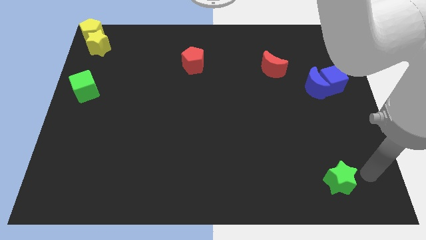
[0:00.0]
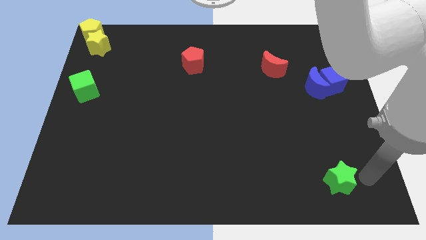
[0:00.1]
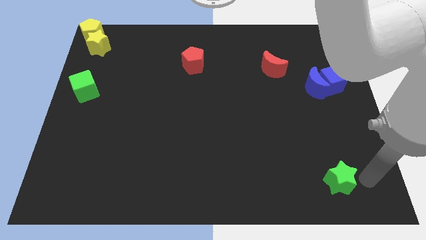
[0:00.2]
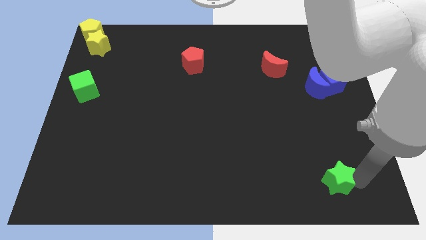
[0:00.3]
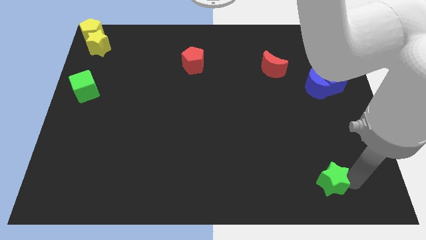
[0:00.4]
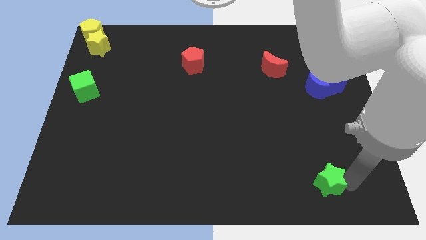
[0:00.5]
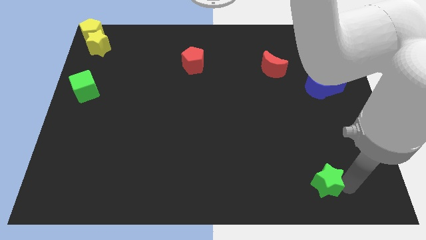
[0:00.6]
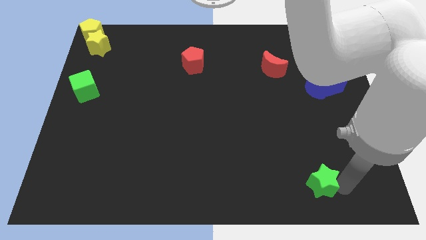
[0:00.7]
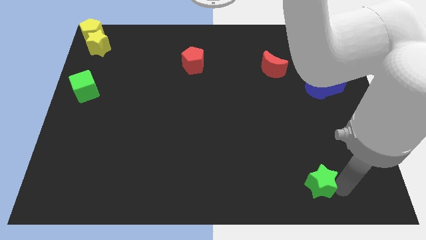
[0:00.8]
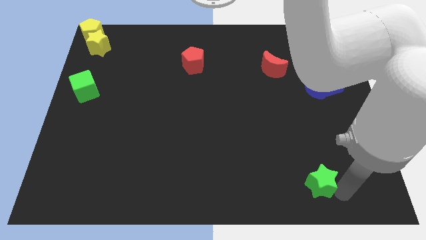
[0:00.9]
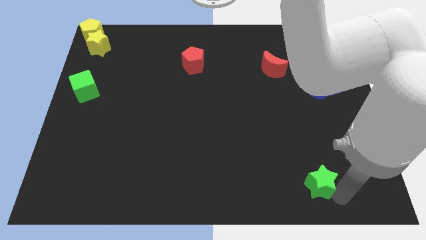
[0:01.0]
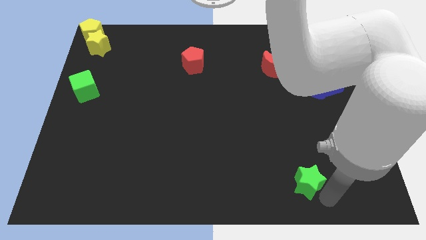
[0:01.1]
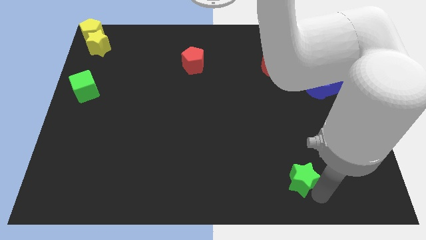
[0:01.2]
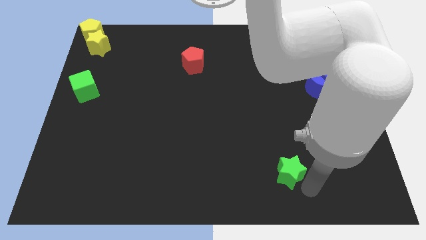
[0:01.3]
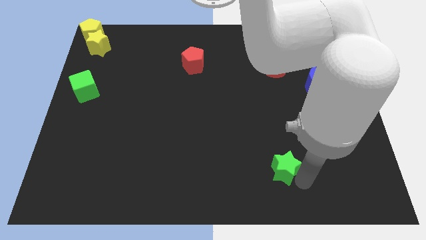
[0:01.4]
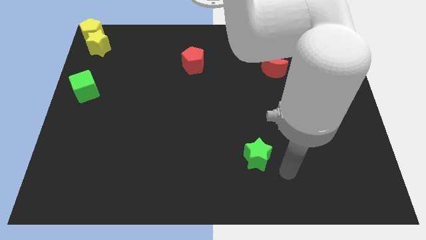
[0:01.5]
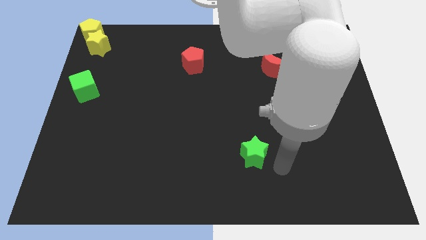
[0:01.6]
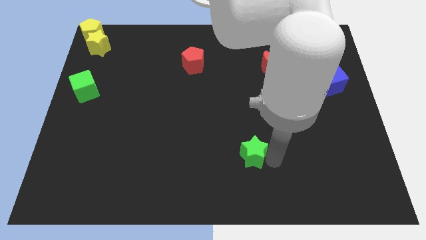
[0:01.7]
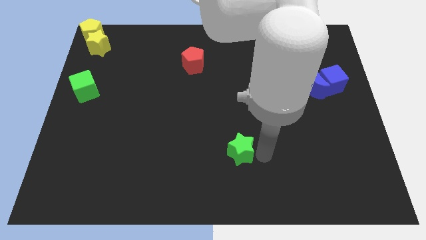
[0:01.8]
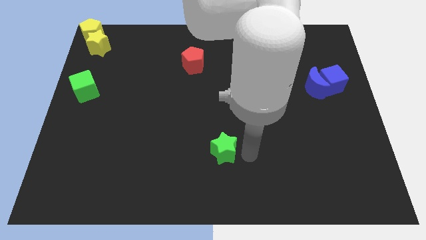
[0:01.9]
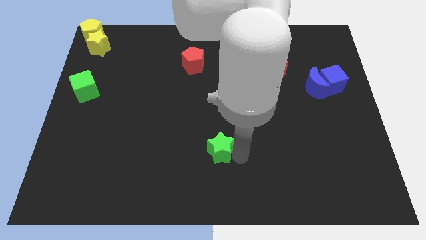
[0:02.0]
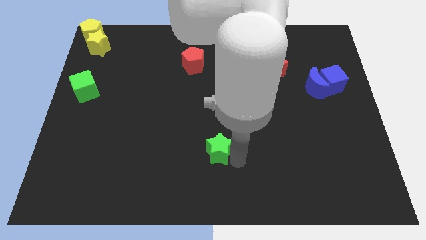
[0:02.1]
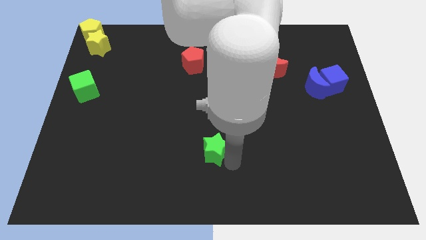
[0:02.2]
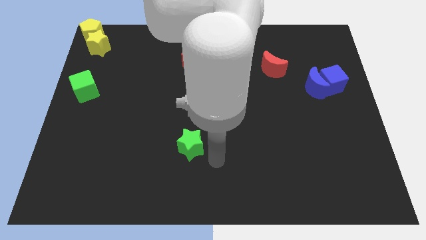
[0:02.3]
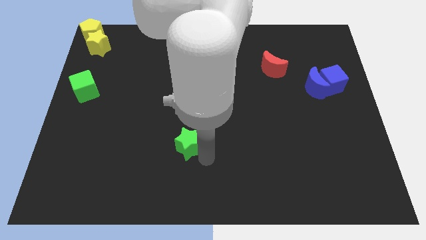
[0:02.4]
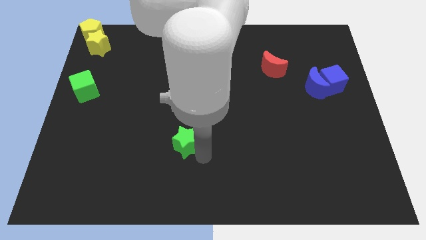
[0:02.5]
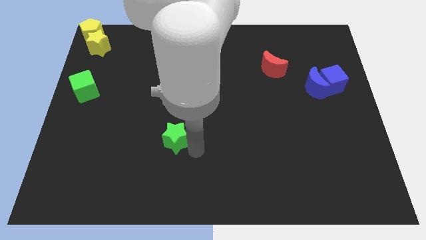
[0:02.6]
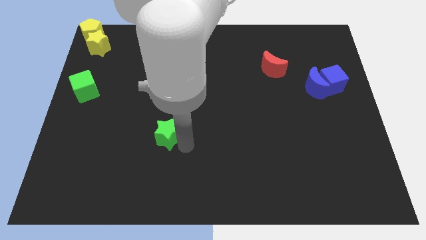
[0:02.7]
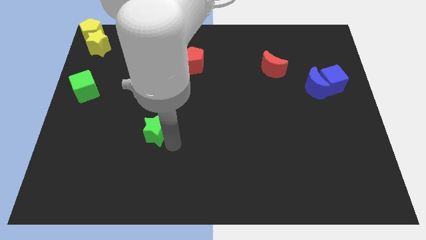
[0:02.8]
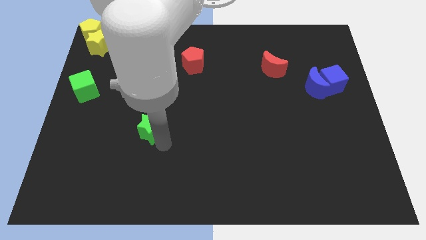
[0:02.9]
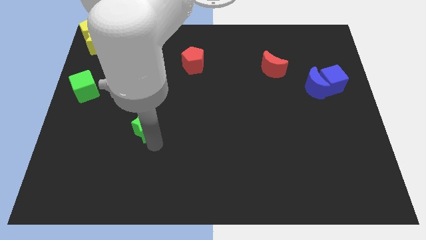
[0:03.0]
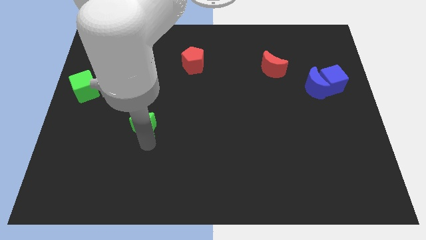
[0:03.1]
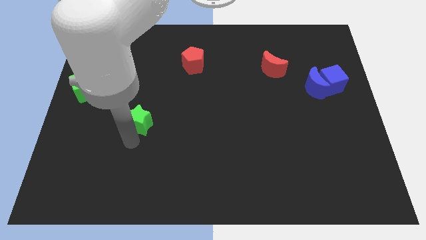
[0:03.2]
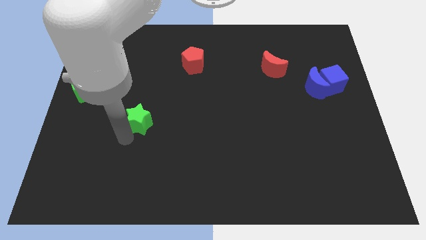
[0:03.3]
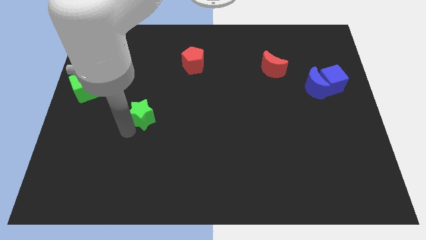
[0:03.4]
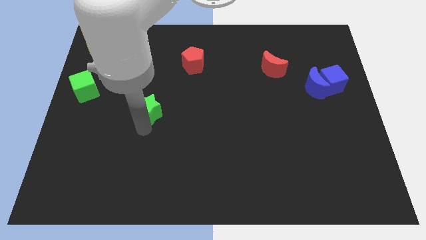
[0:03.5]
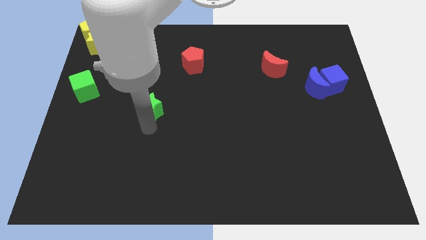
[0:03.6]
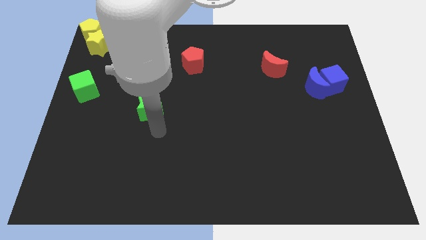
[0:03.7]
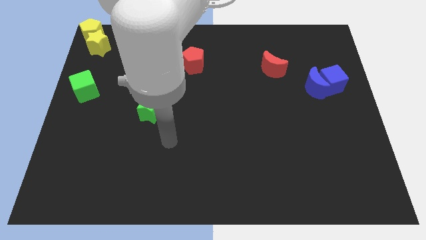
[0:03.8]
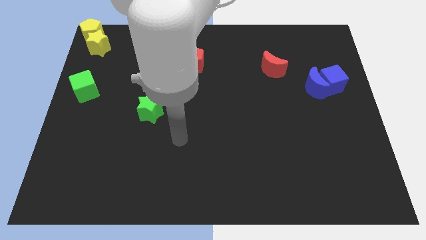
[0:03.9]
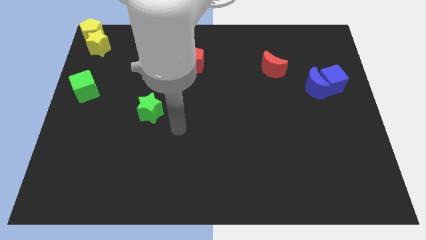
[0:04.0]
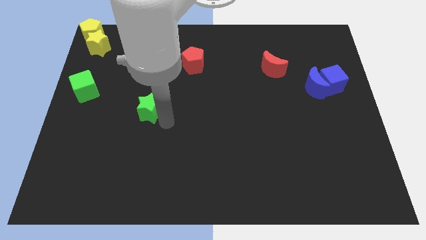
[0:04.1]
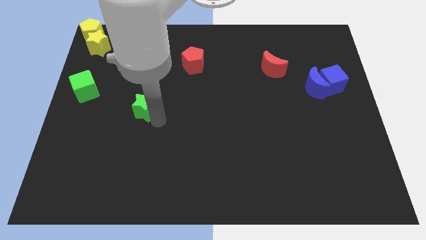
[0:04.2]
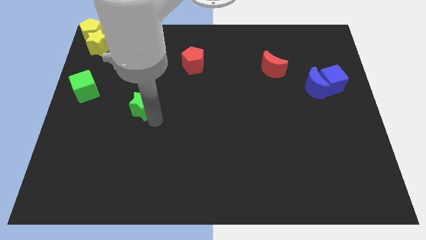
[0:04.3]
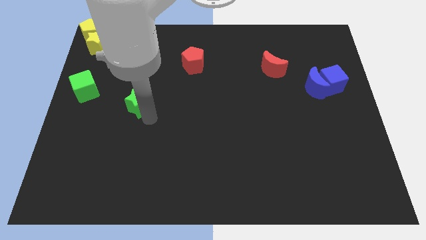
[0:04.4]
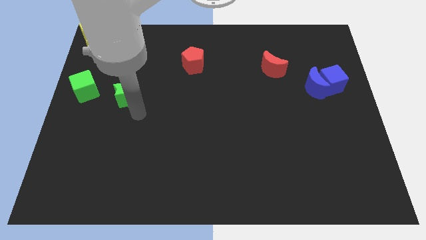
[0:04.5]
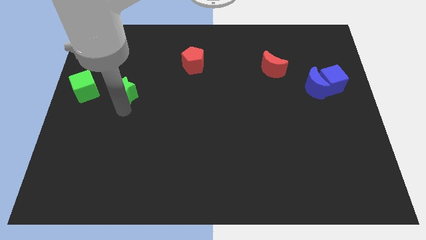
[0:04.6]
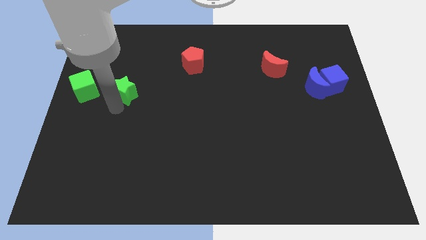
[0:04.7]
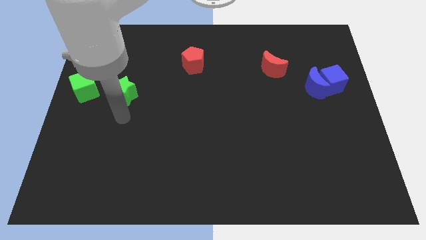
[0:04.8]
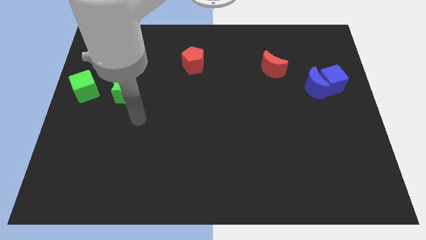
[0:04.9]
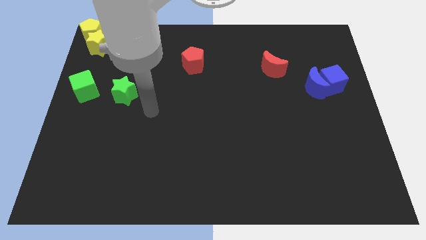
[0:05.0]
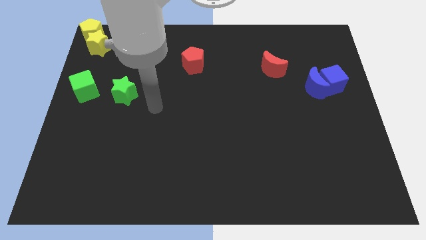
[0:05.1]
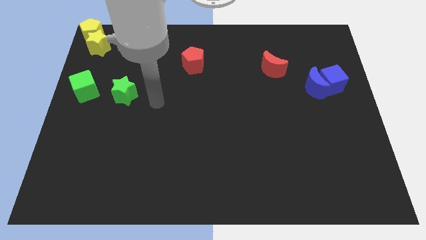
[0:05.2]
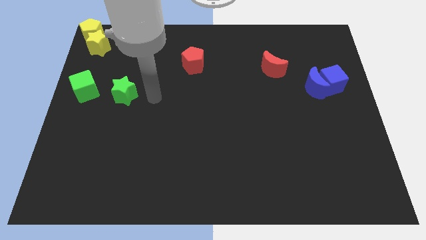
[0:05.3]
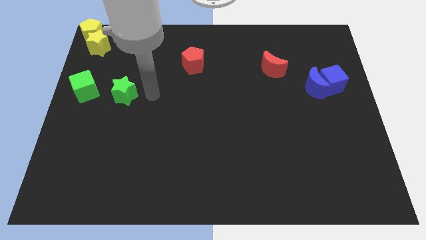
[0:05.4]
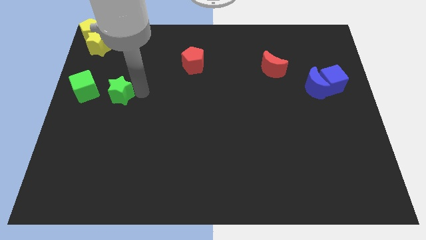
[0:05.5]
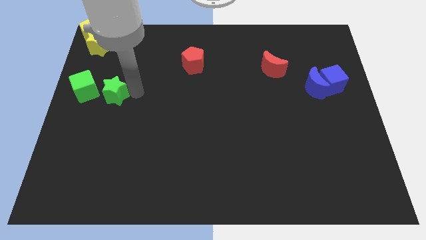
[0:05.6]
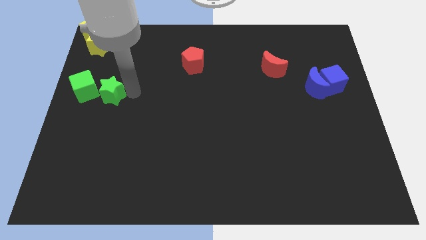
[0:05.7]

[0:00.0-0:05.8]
place the green star at the right of the green cube

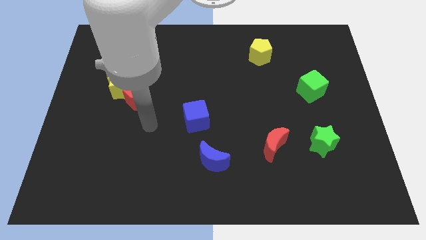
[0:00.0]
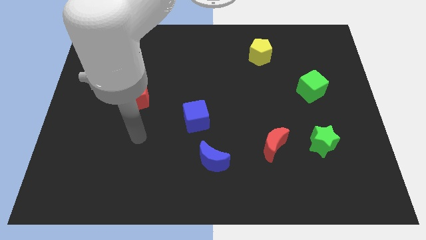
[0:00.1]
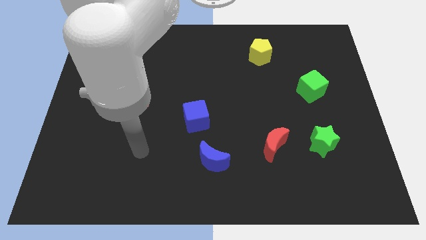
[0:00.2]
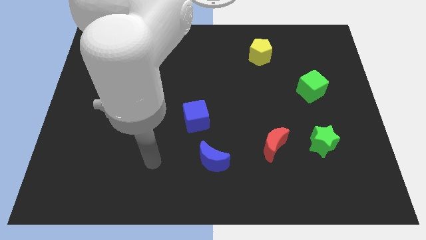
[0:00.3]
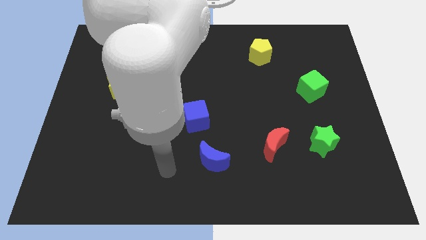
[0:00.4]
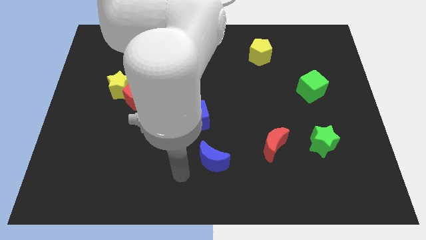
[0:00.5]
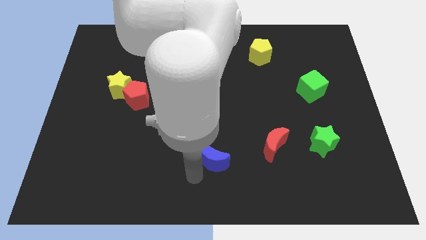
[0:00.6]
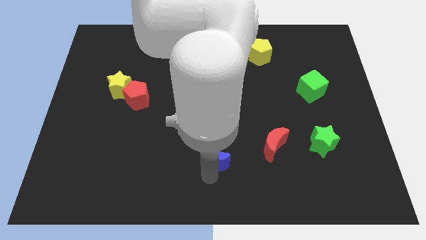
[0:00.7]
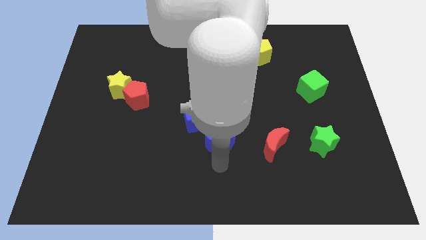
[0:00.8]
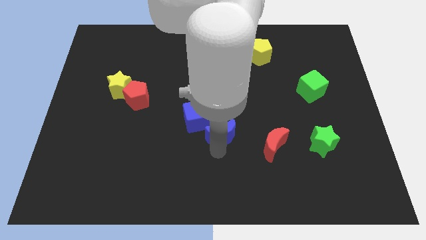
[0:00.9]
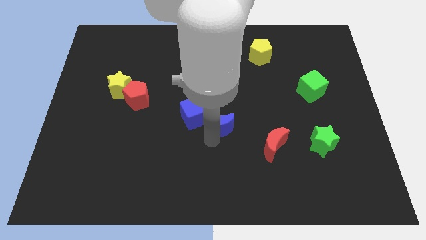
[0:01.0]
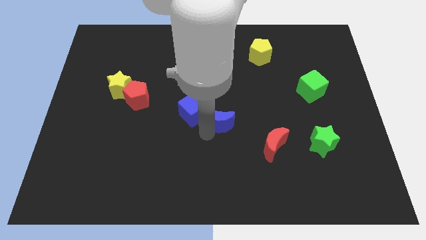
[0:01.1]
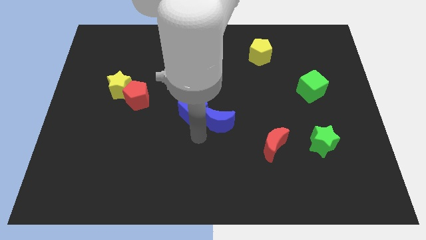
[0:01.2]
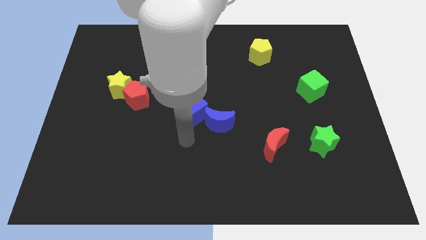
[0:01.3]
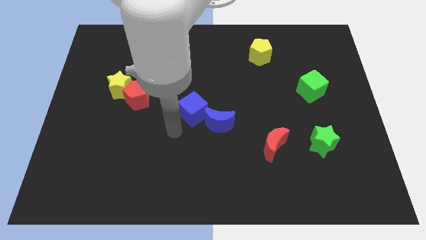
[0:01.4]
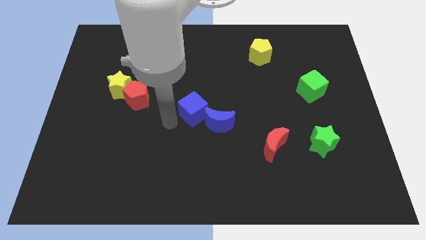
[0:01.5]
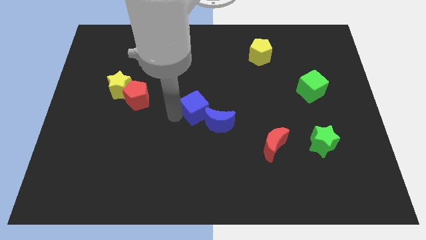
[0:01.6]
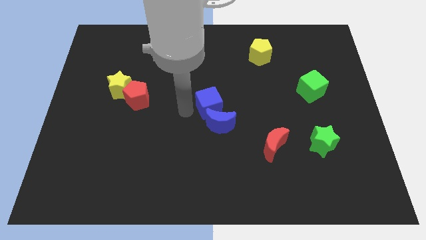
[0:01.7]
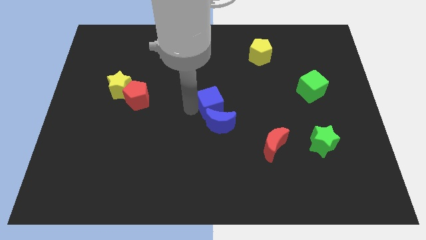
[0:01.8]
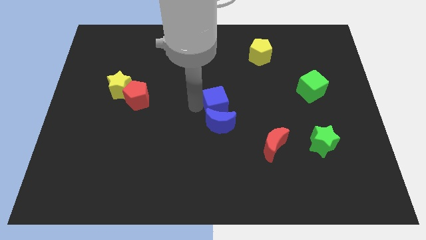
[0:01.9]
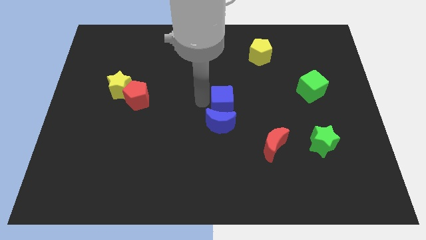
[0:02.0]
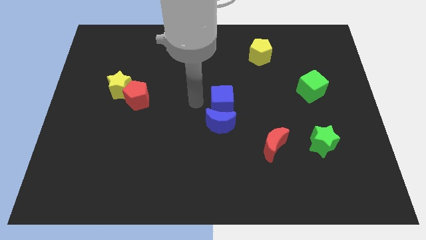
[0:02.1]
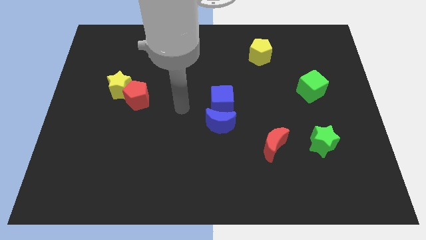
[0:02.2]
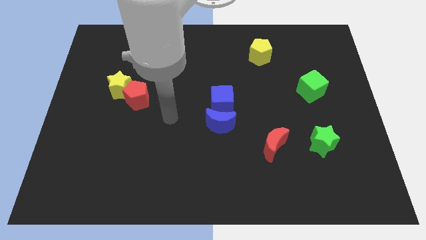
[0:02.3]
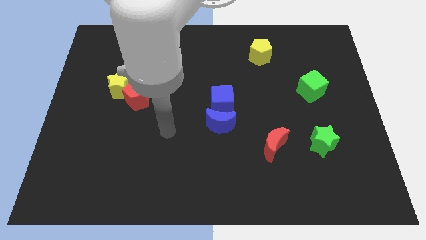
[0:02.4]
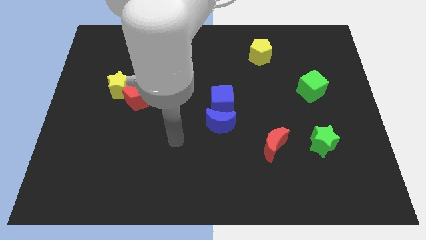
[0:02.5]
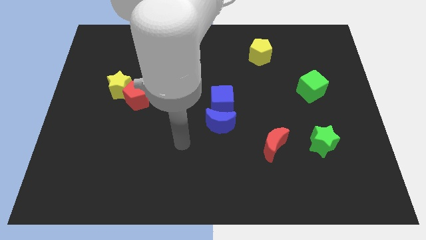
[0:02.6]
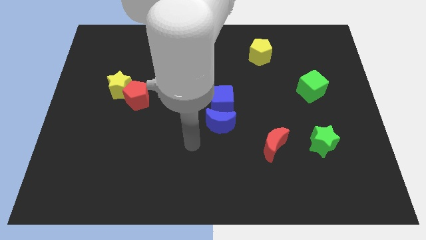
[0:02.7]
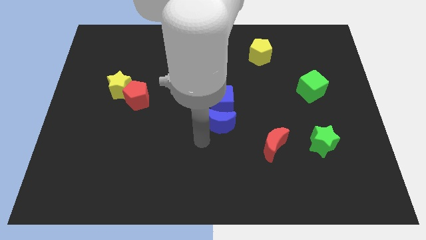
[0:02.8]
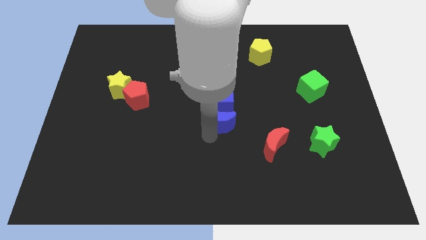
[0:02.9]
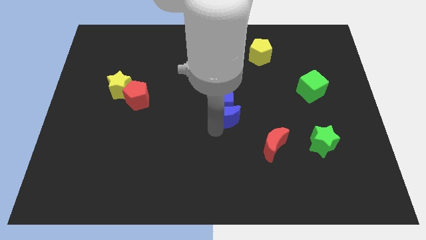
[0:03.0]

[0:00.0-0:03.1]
place blue moon below blue cube

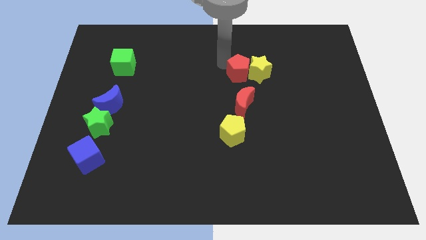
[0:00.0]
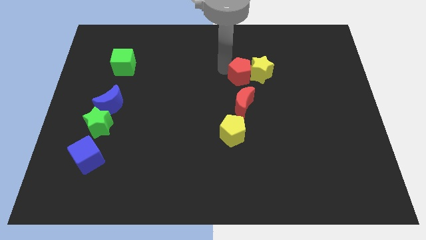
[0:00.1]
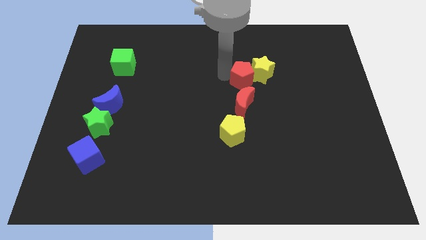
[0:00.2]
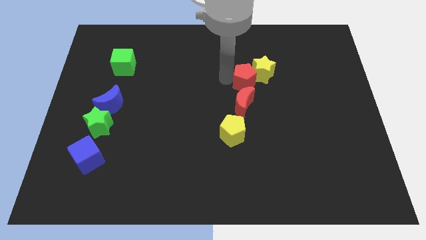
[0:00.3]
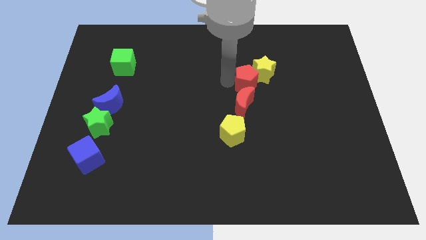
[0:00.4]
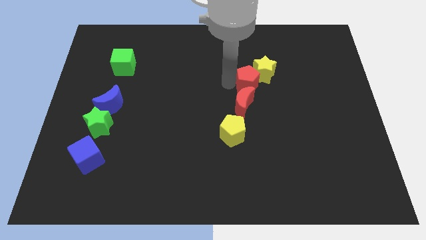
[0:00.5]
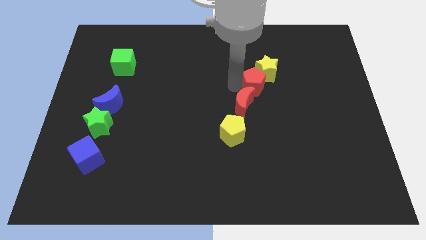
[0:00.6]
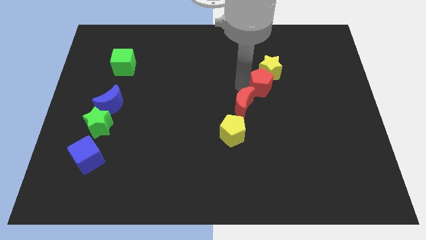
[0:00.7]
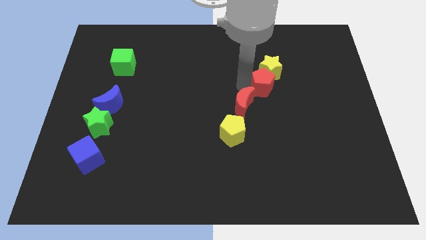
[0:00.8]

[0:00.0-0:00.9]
push red pentagon above red crescent
